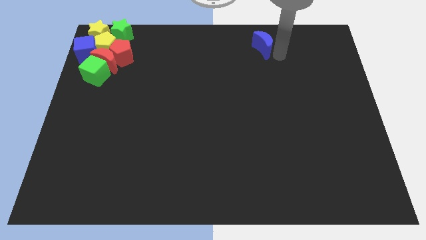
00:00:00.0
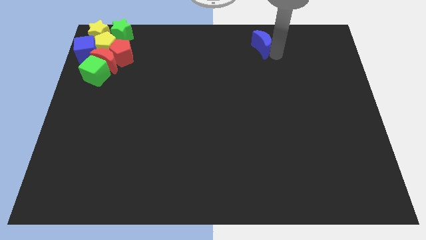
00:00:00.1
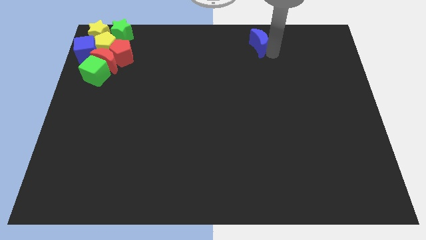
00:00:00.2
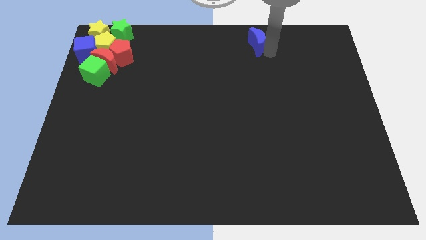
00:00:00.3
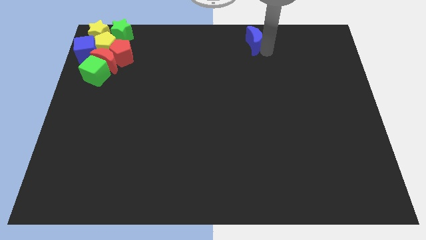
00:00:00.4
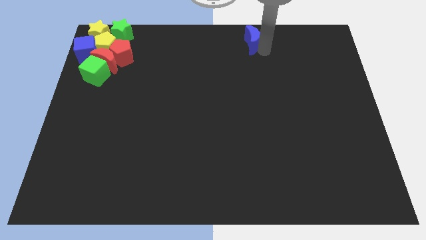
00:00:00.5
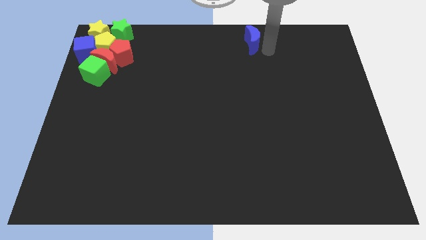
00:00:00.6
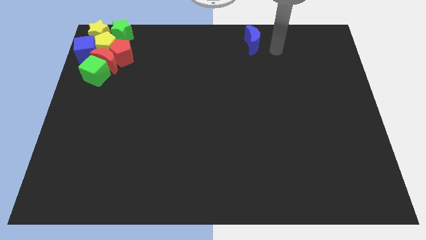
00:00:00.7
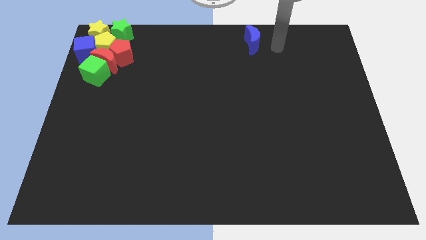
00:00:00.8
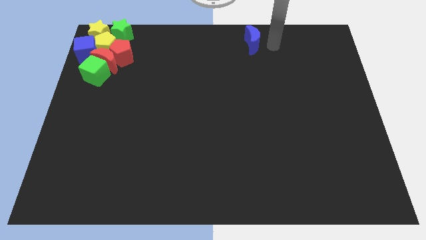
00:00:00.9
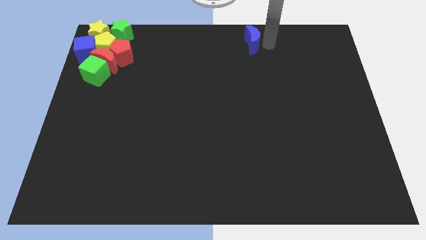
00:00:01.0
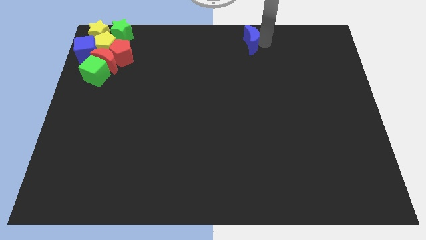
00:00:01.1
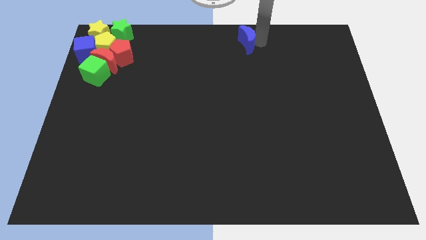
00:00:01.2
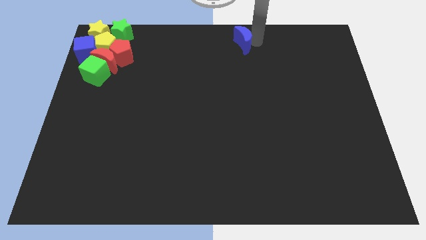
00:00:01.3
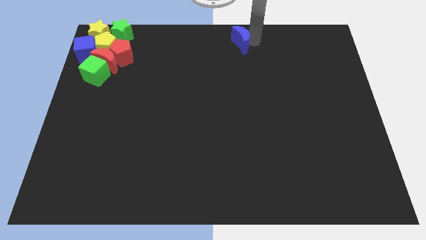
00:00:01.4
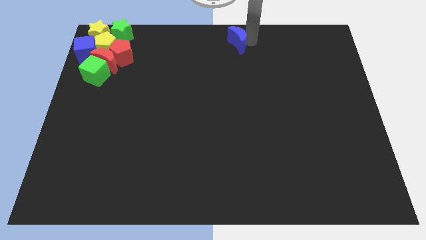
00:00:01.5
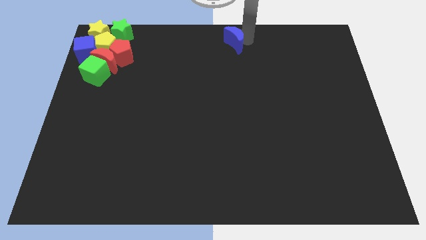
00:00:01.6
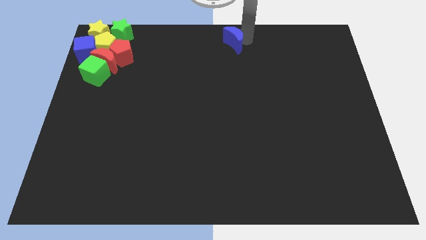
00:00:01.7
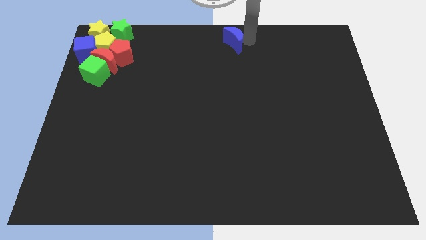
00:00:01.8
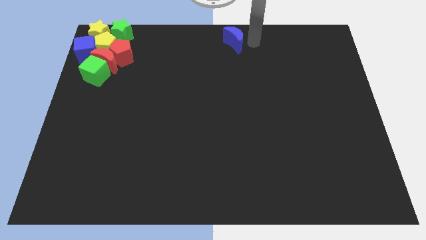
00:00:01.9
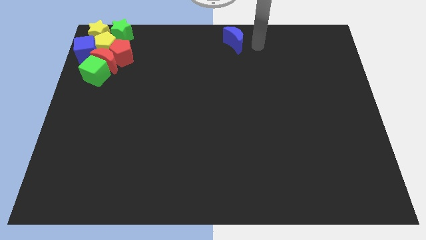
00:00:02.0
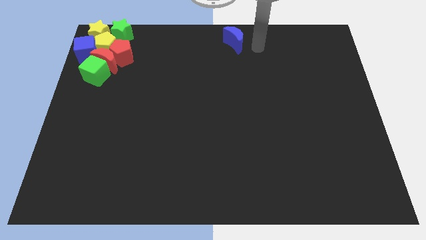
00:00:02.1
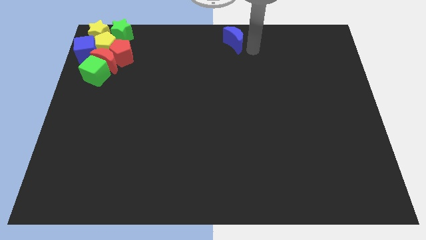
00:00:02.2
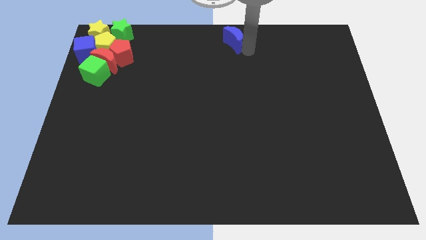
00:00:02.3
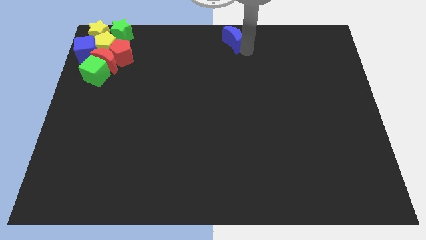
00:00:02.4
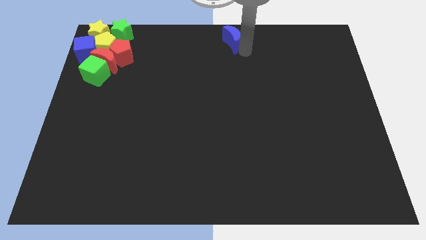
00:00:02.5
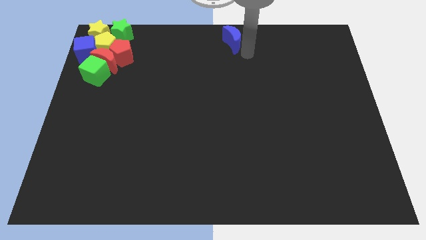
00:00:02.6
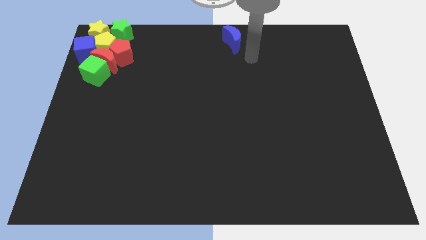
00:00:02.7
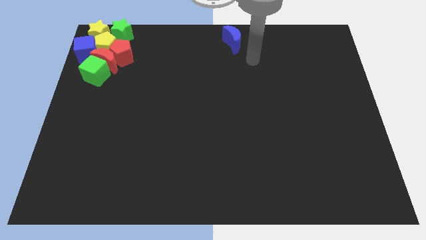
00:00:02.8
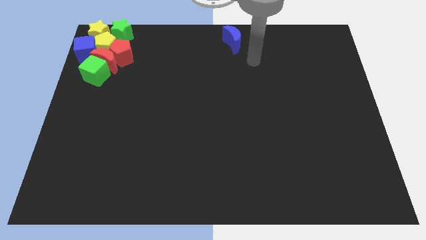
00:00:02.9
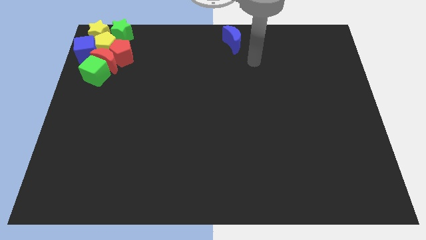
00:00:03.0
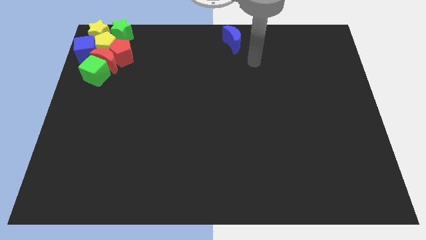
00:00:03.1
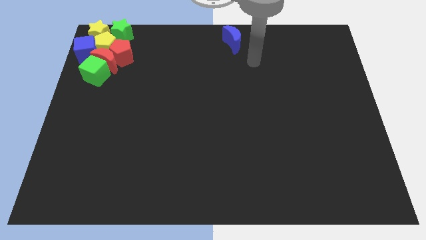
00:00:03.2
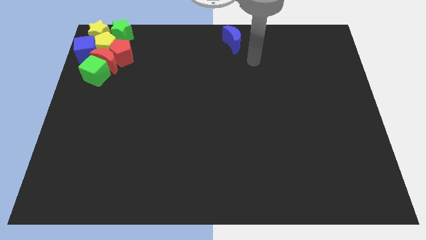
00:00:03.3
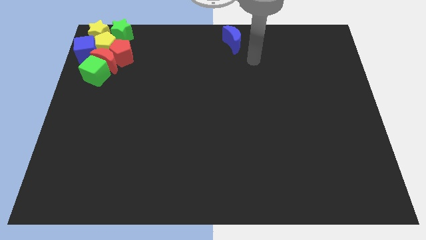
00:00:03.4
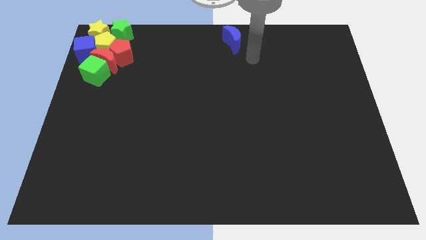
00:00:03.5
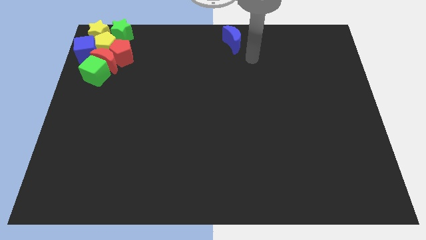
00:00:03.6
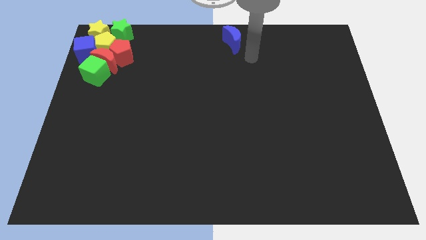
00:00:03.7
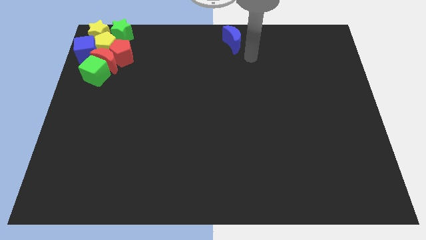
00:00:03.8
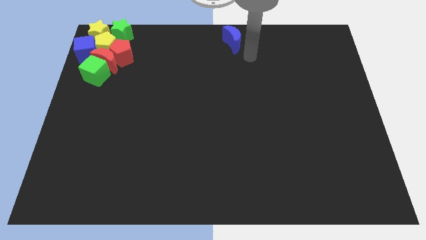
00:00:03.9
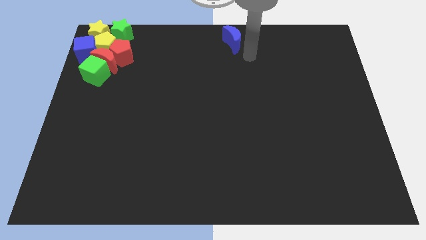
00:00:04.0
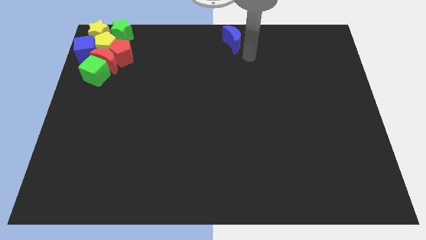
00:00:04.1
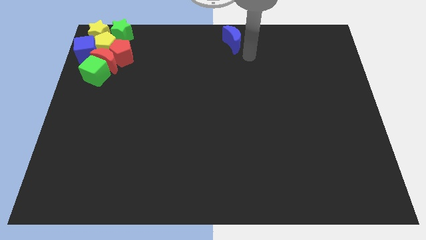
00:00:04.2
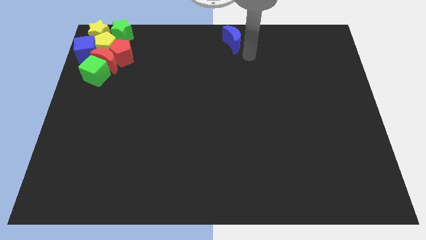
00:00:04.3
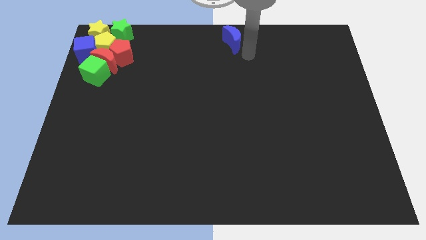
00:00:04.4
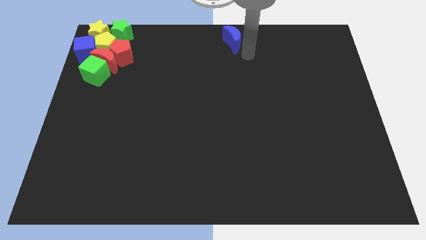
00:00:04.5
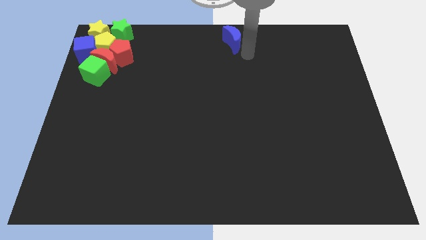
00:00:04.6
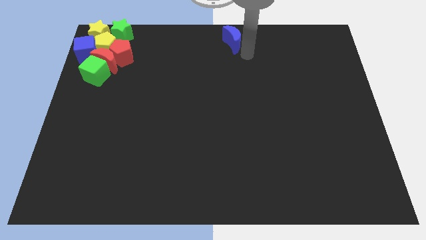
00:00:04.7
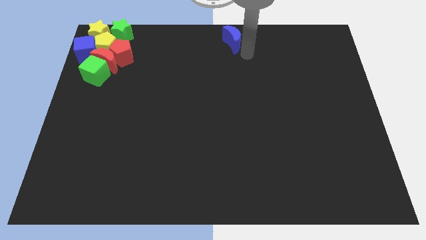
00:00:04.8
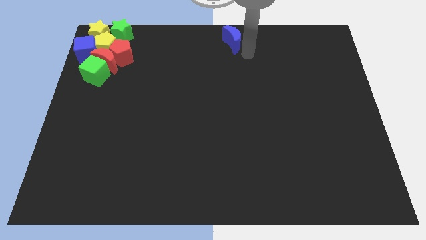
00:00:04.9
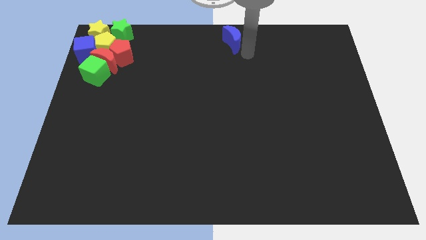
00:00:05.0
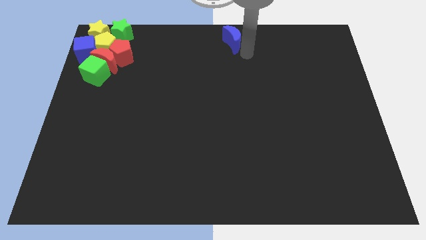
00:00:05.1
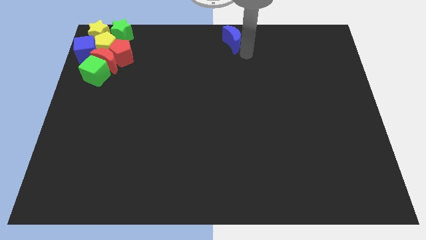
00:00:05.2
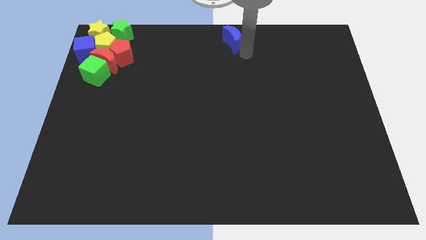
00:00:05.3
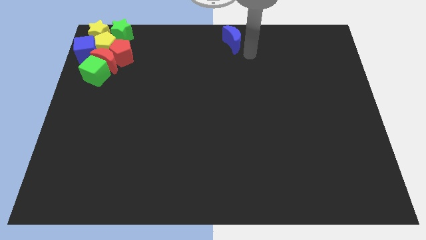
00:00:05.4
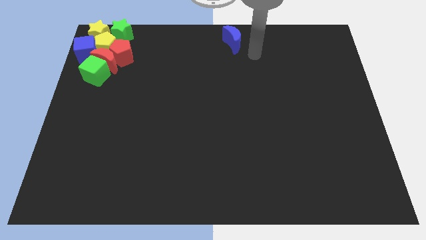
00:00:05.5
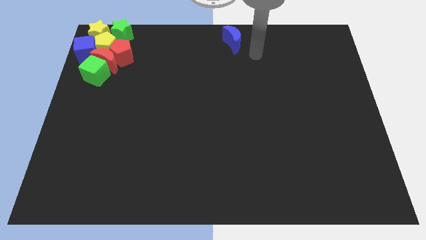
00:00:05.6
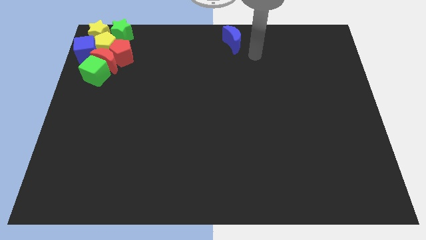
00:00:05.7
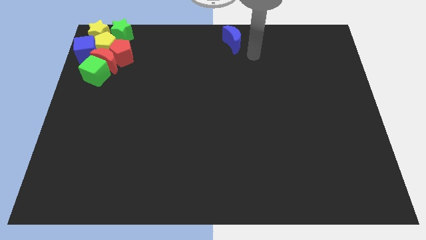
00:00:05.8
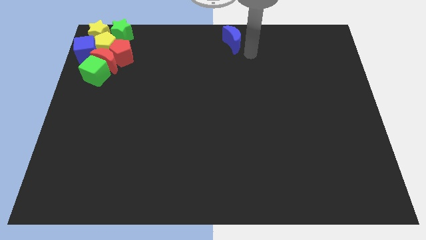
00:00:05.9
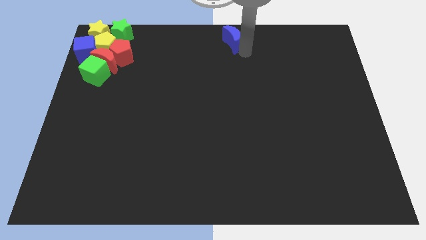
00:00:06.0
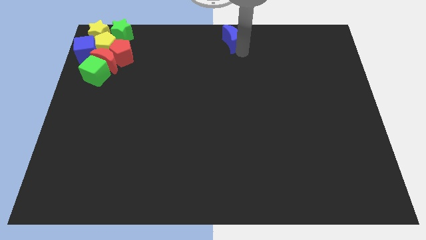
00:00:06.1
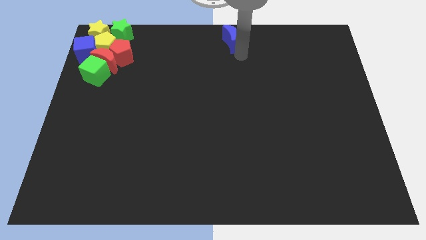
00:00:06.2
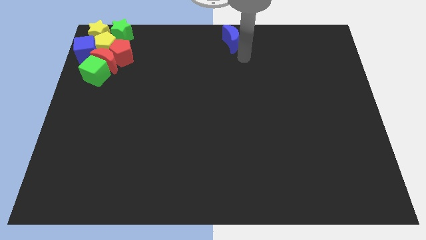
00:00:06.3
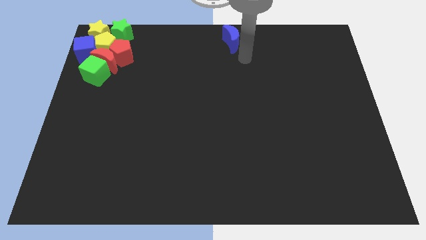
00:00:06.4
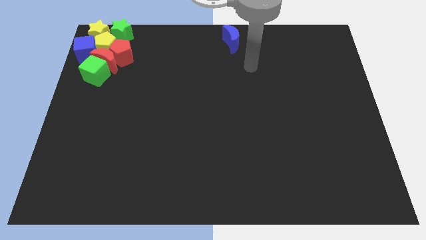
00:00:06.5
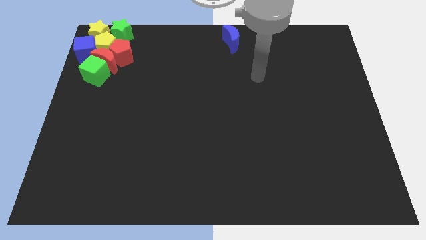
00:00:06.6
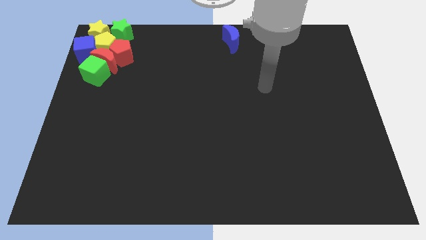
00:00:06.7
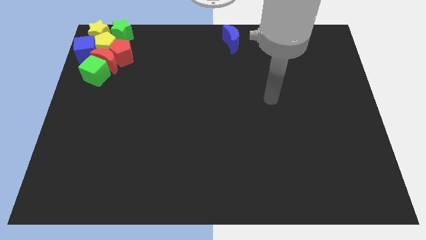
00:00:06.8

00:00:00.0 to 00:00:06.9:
place the blue moon to the center top of the board

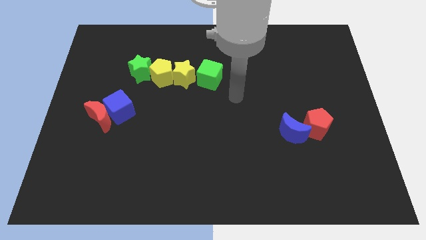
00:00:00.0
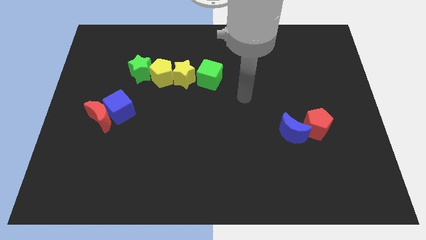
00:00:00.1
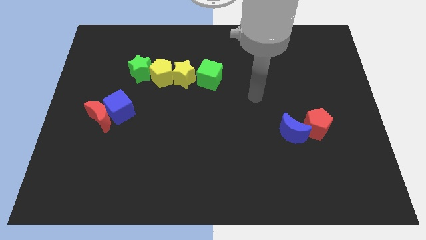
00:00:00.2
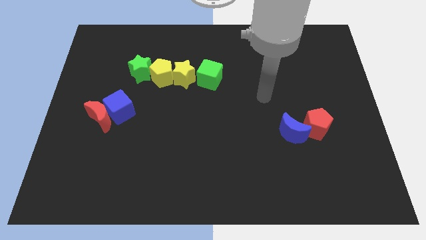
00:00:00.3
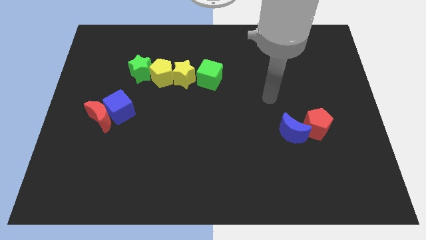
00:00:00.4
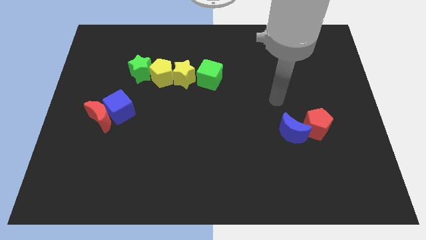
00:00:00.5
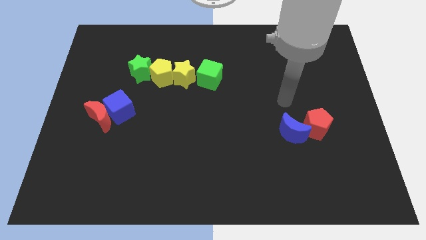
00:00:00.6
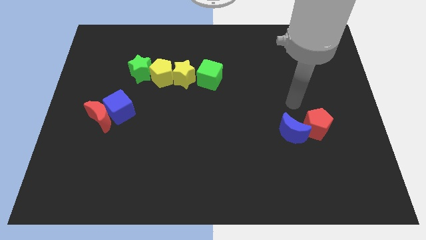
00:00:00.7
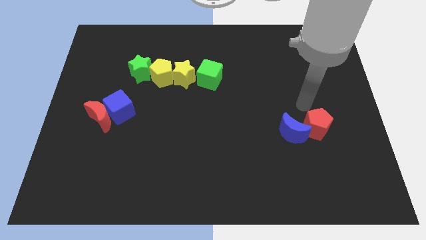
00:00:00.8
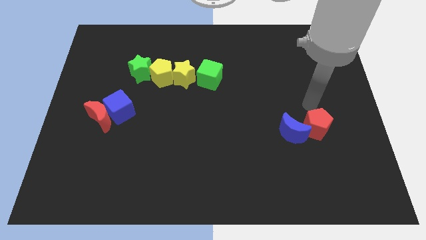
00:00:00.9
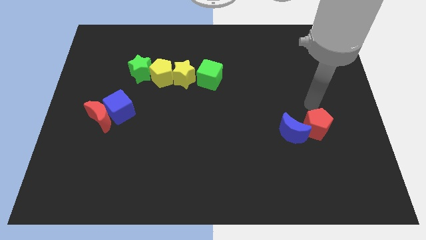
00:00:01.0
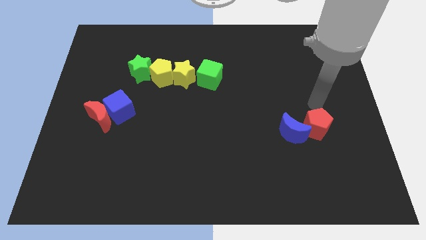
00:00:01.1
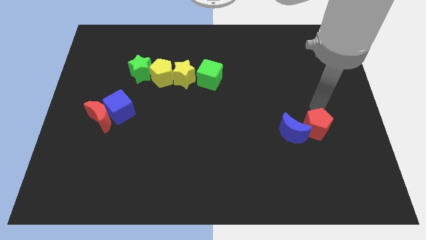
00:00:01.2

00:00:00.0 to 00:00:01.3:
move your arm to the top of the red pentagon

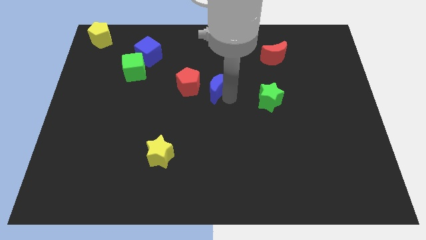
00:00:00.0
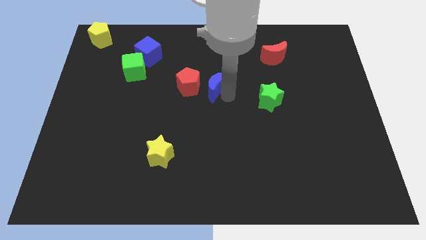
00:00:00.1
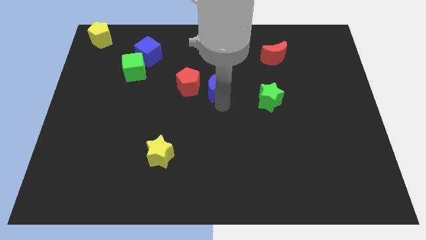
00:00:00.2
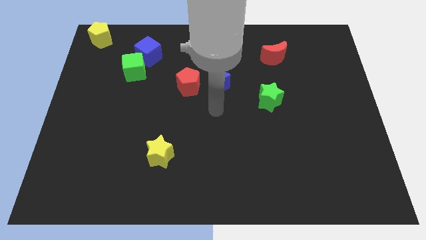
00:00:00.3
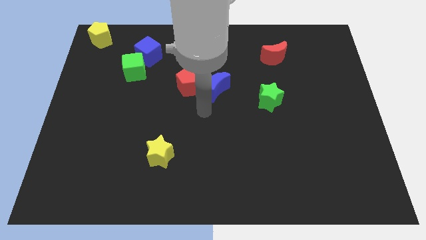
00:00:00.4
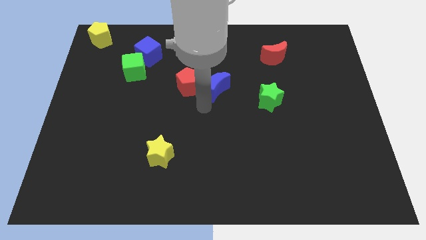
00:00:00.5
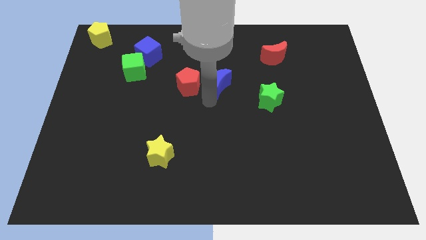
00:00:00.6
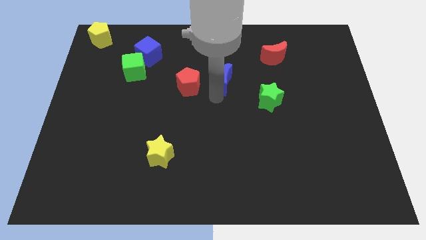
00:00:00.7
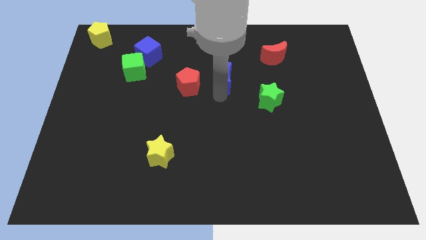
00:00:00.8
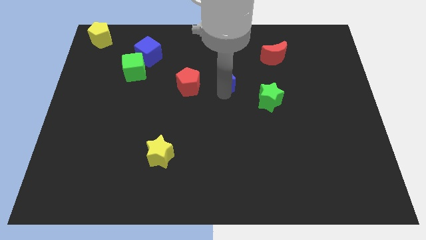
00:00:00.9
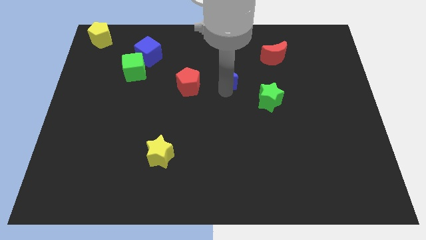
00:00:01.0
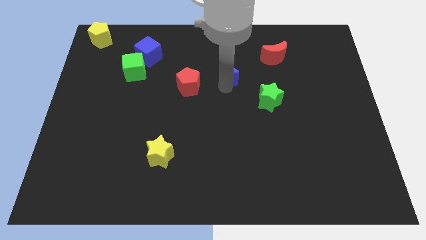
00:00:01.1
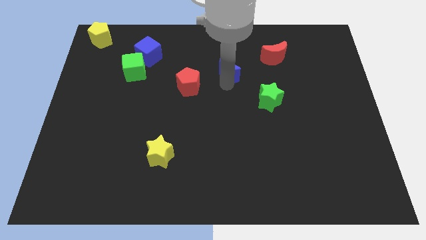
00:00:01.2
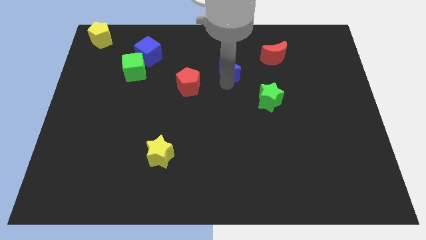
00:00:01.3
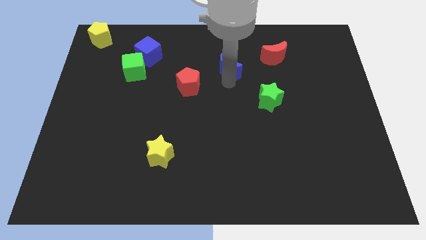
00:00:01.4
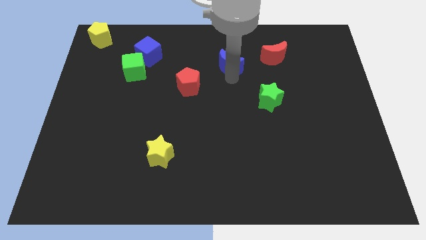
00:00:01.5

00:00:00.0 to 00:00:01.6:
place the blue moon in between the red blocks
